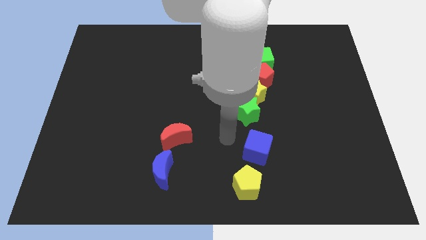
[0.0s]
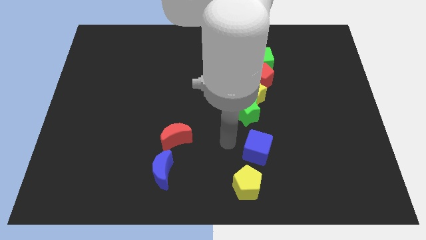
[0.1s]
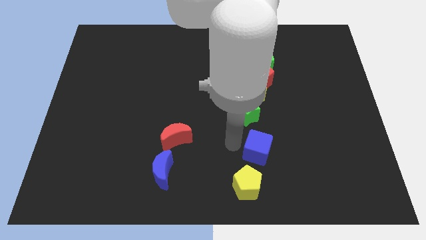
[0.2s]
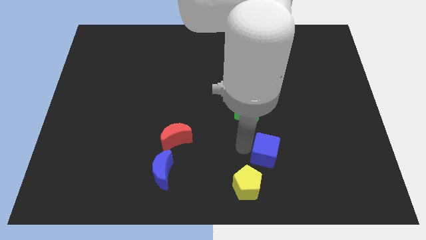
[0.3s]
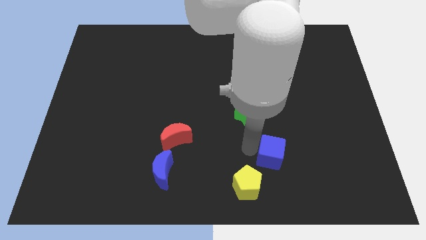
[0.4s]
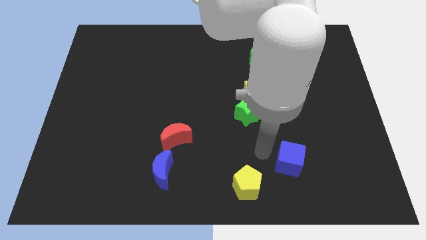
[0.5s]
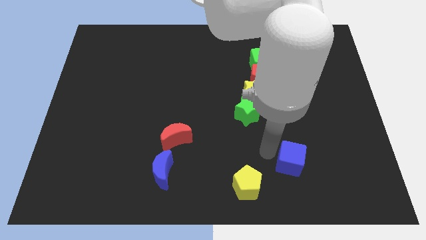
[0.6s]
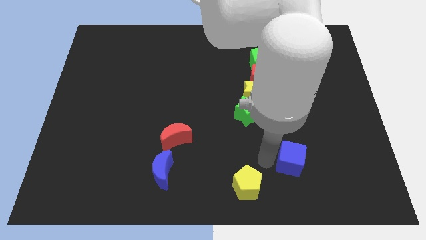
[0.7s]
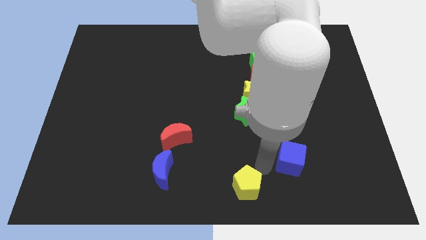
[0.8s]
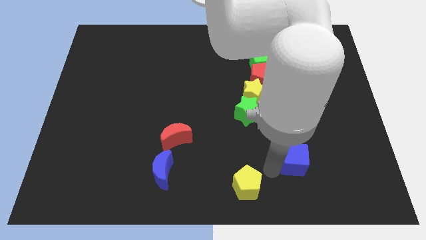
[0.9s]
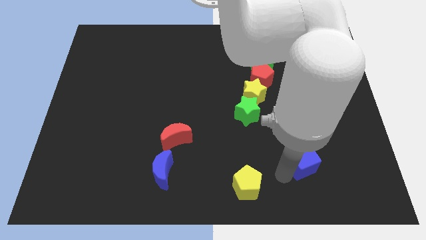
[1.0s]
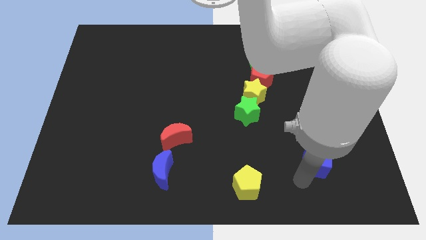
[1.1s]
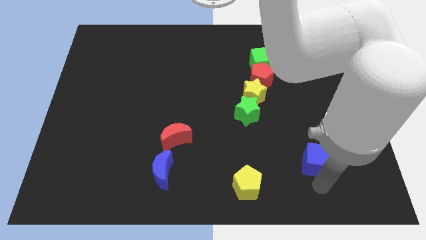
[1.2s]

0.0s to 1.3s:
slide the blue cube to the right side of the table

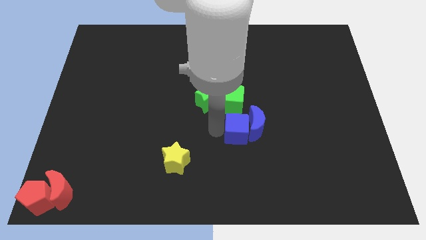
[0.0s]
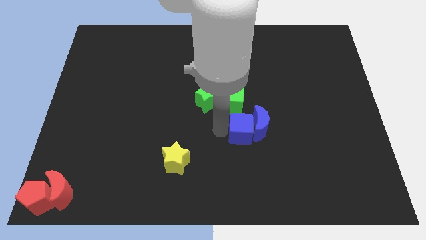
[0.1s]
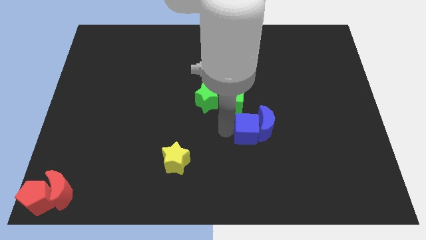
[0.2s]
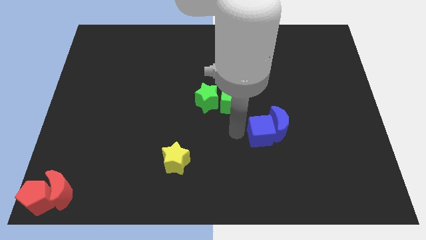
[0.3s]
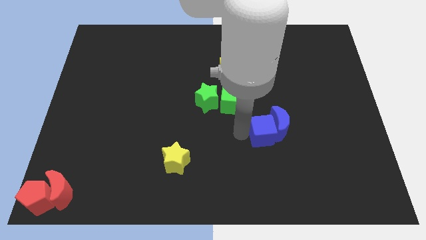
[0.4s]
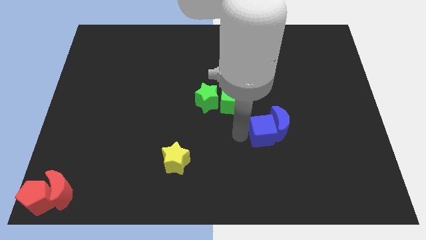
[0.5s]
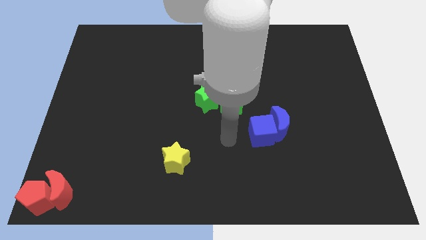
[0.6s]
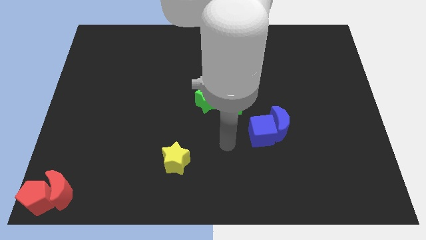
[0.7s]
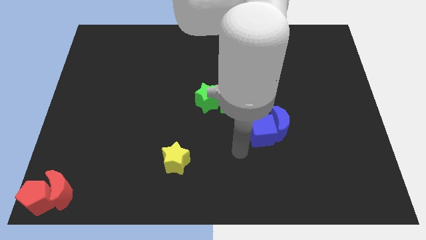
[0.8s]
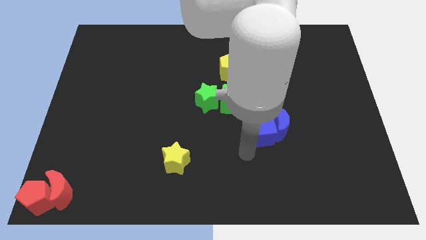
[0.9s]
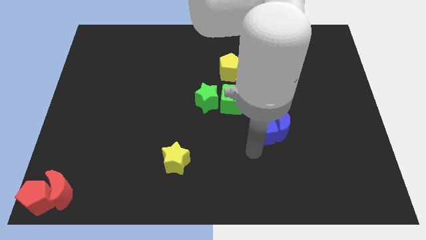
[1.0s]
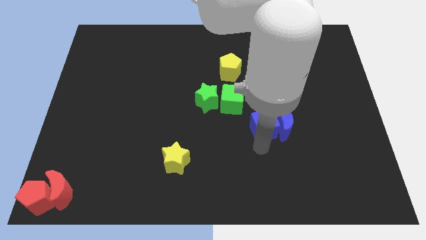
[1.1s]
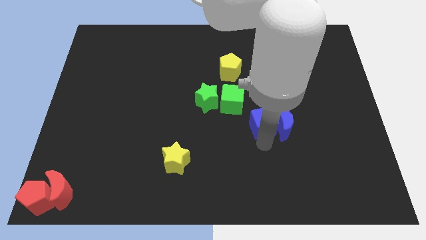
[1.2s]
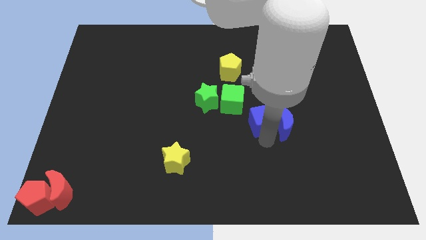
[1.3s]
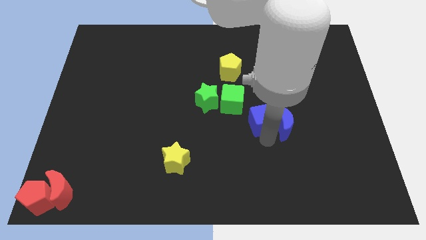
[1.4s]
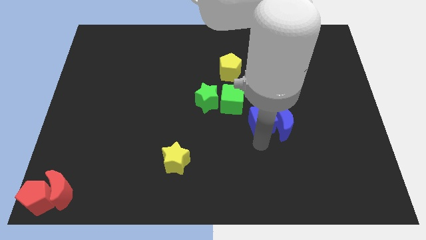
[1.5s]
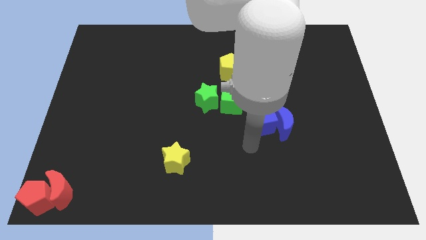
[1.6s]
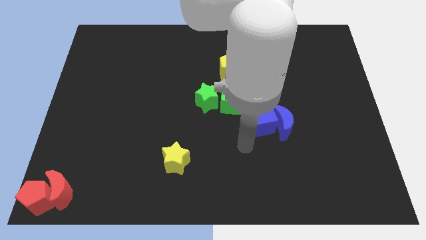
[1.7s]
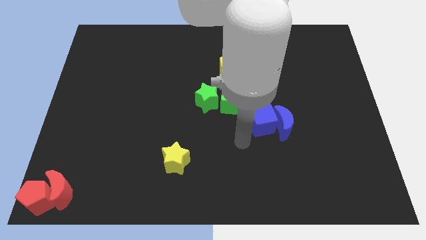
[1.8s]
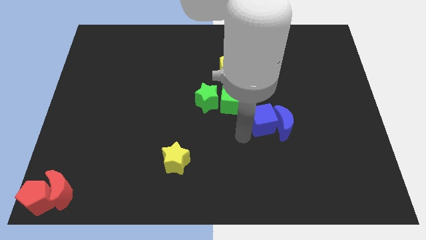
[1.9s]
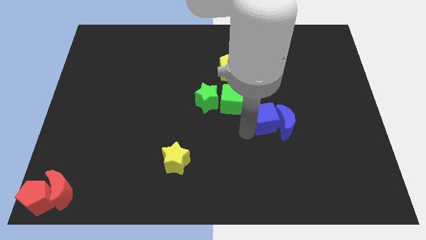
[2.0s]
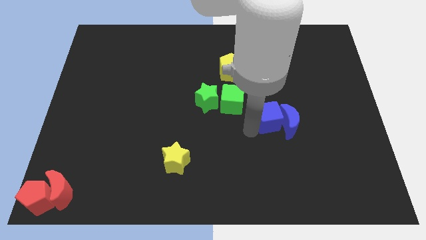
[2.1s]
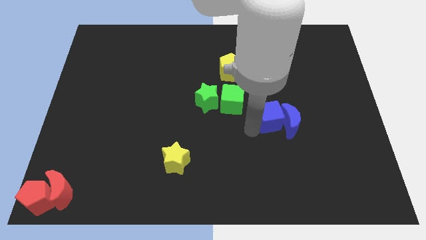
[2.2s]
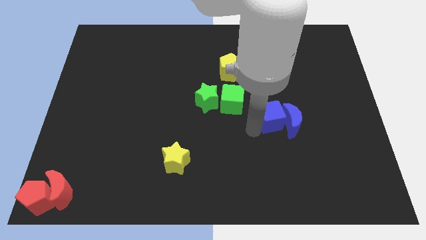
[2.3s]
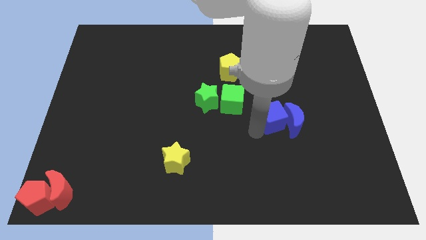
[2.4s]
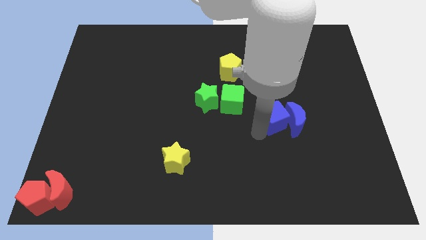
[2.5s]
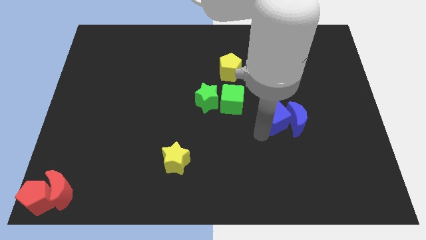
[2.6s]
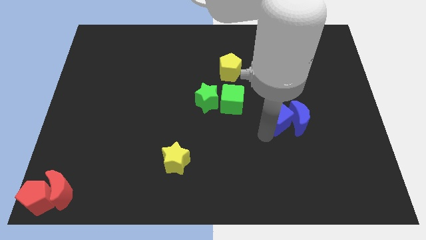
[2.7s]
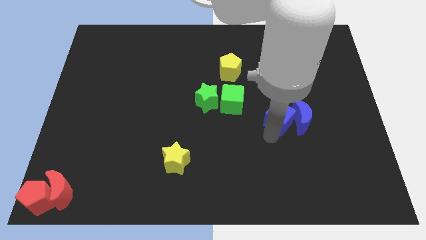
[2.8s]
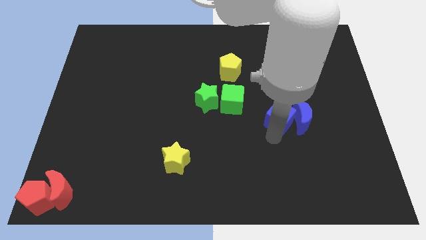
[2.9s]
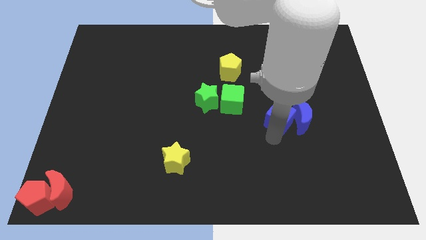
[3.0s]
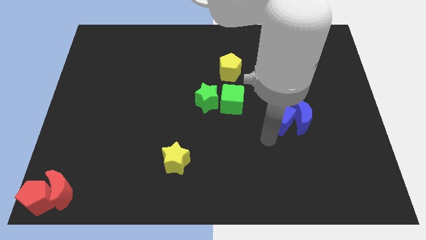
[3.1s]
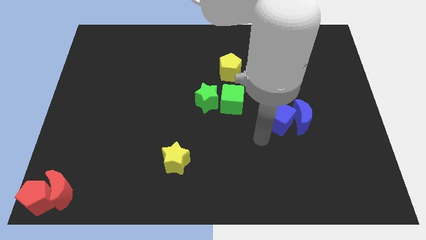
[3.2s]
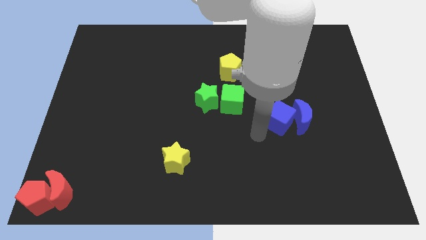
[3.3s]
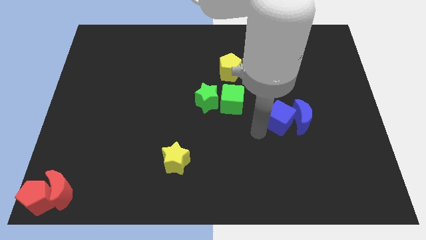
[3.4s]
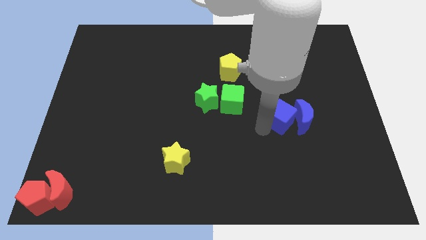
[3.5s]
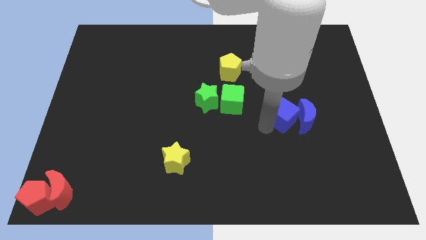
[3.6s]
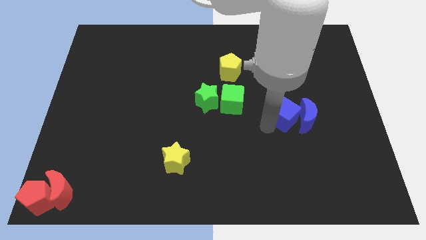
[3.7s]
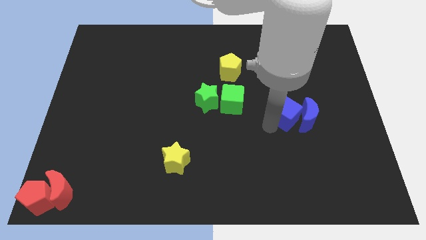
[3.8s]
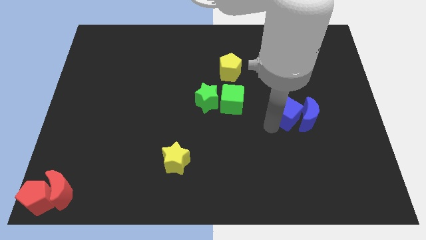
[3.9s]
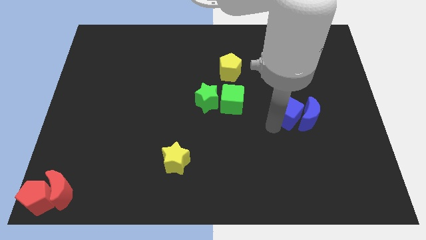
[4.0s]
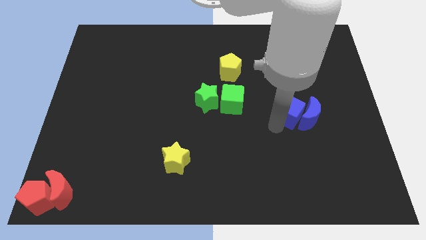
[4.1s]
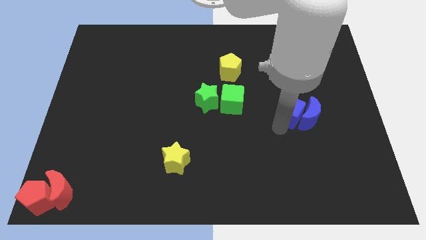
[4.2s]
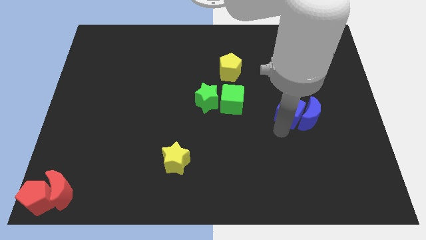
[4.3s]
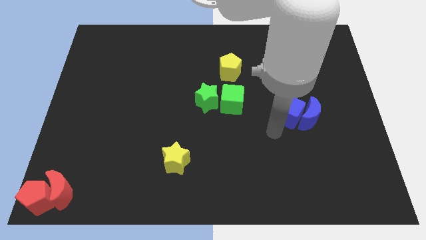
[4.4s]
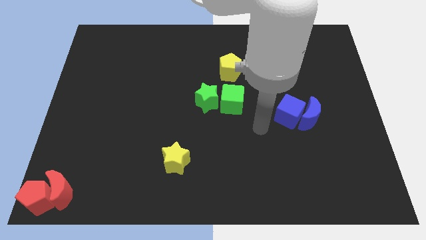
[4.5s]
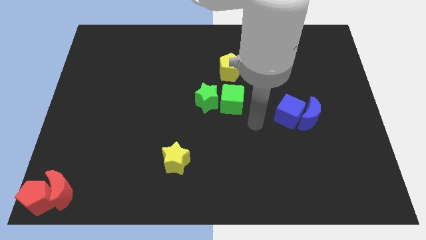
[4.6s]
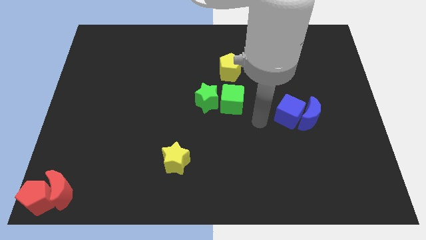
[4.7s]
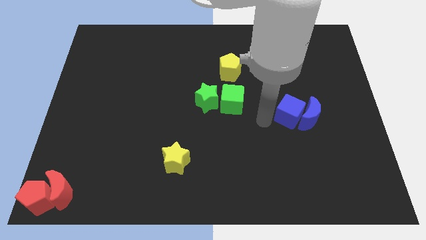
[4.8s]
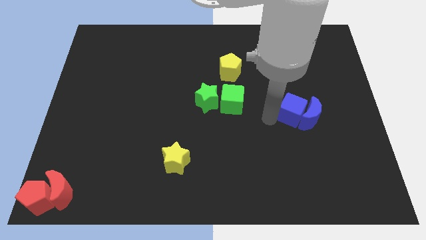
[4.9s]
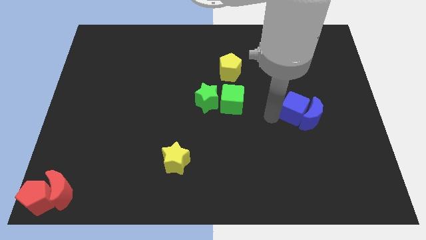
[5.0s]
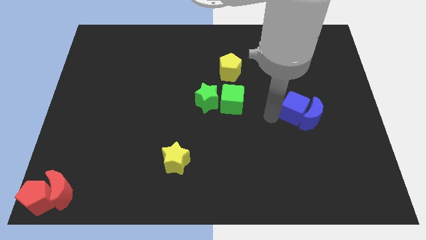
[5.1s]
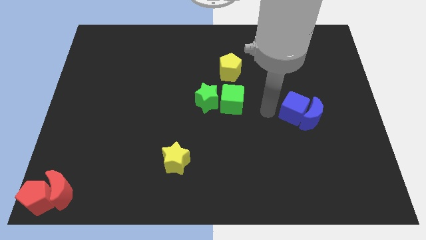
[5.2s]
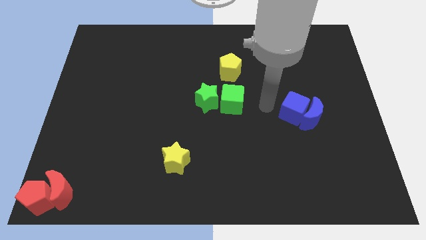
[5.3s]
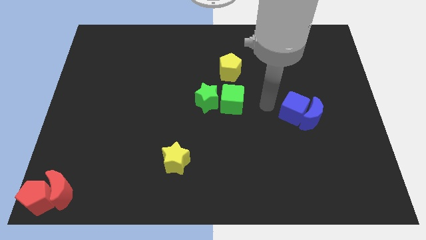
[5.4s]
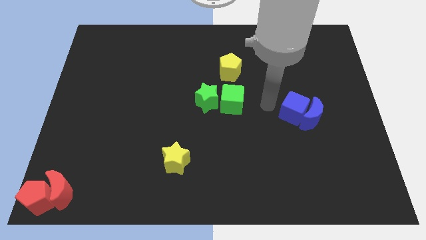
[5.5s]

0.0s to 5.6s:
push the blue moon with blue cube to the right center of the board

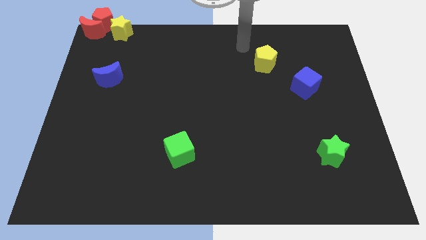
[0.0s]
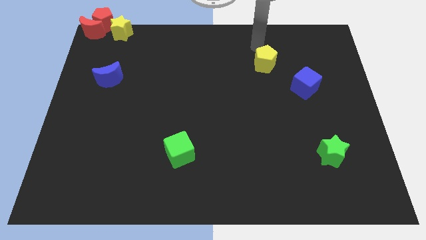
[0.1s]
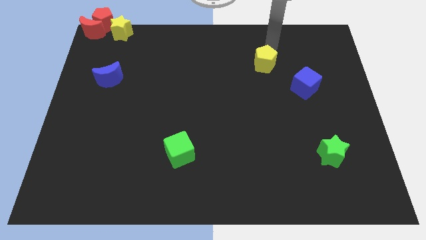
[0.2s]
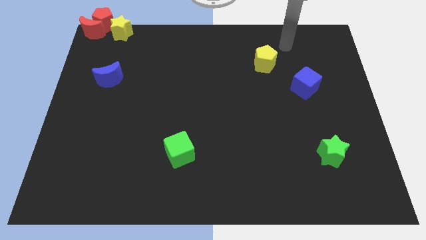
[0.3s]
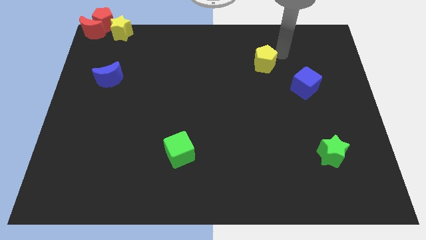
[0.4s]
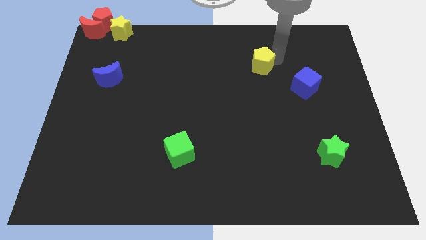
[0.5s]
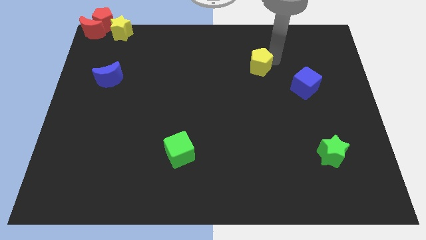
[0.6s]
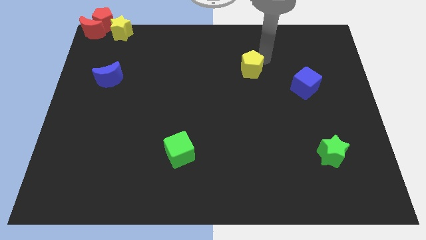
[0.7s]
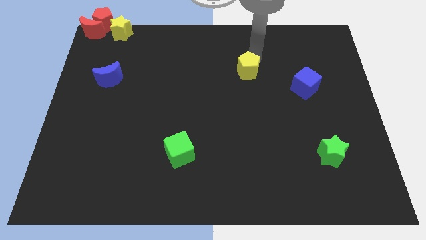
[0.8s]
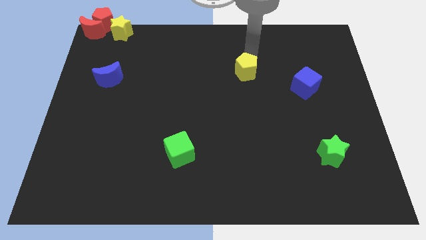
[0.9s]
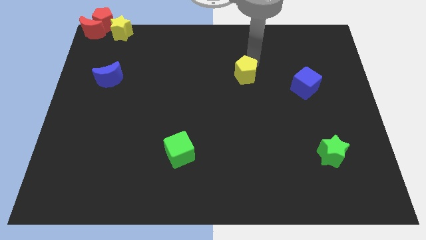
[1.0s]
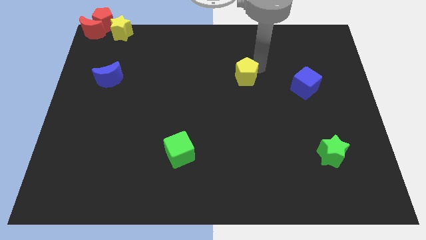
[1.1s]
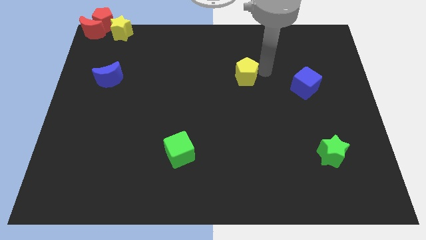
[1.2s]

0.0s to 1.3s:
slide the yellow pentagon parallel to the blue moon

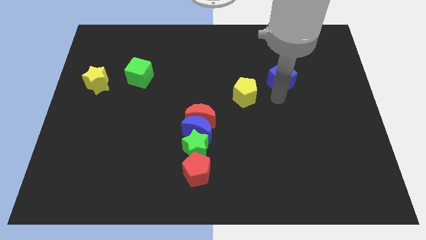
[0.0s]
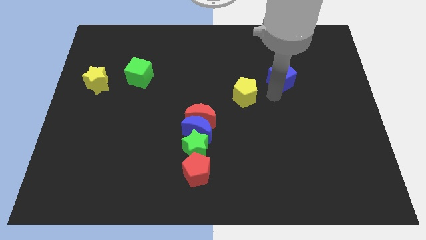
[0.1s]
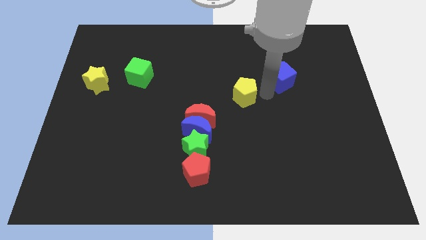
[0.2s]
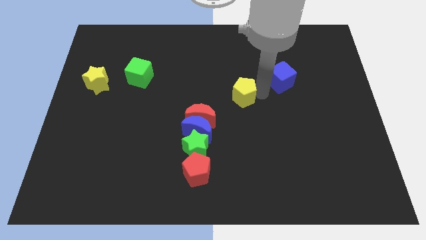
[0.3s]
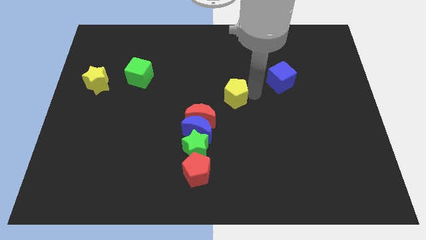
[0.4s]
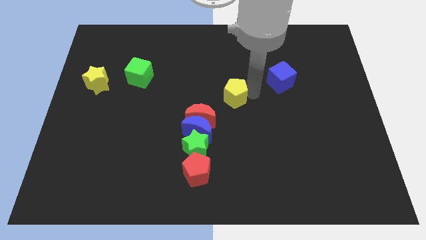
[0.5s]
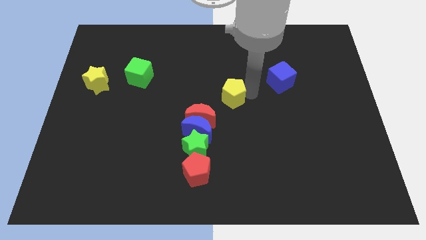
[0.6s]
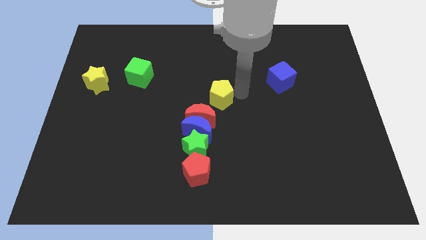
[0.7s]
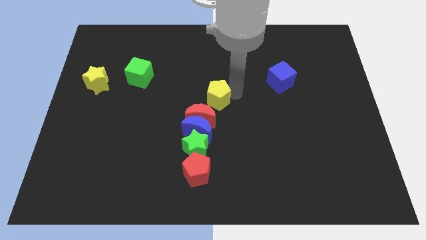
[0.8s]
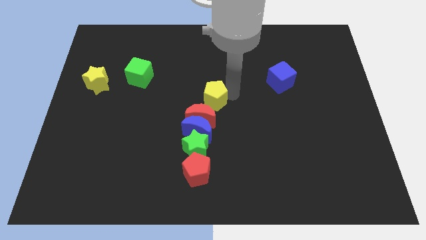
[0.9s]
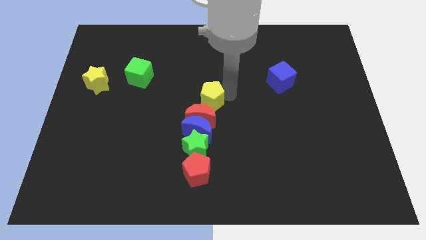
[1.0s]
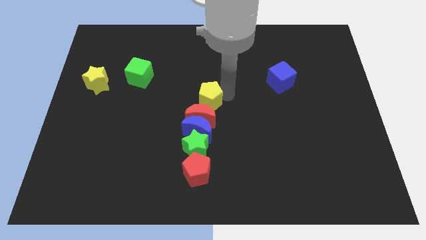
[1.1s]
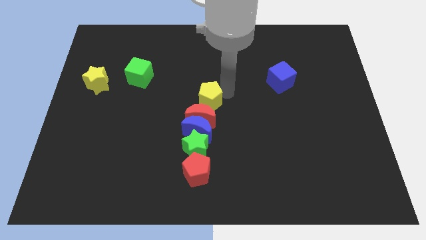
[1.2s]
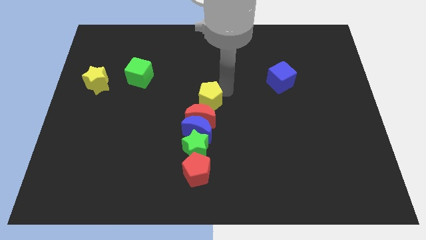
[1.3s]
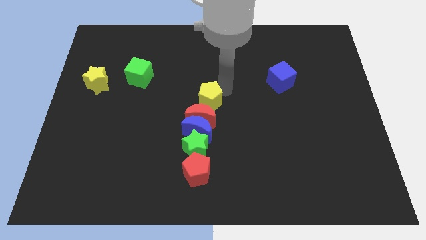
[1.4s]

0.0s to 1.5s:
put the yellow pentagon vertically above the red moon
